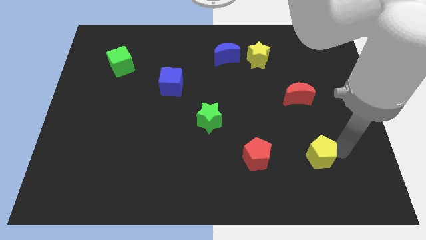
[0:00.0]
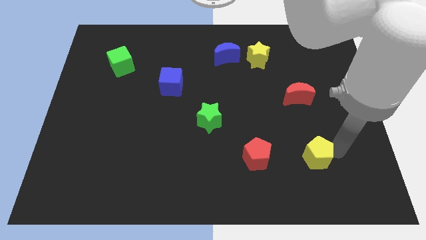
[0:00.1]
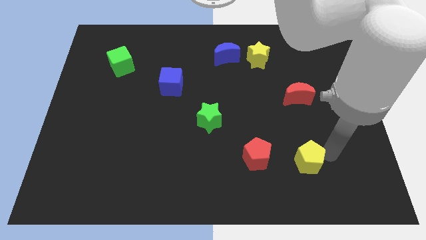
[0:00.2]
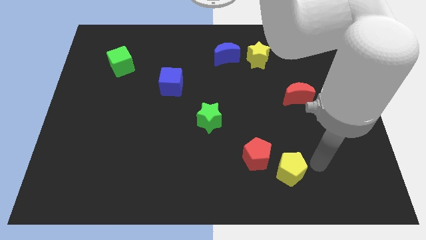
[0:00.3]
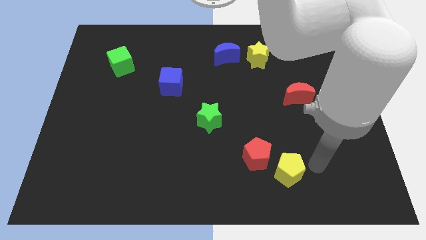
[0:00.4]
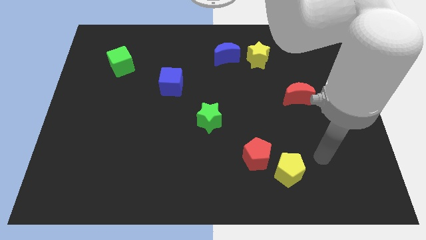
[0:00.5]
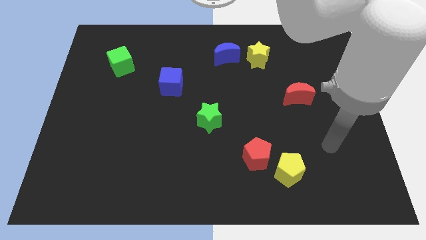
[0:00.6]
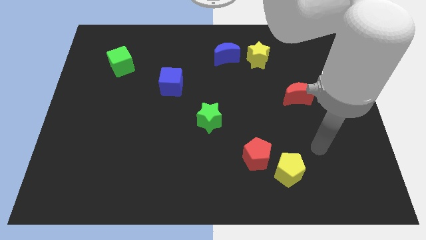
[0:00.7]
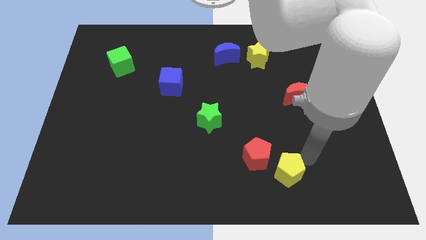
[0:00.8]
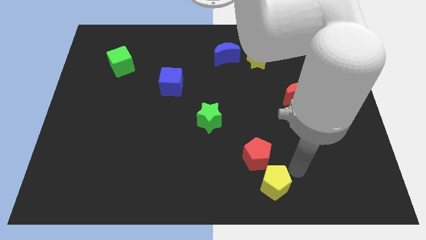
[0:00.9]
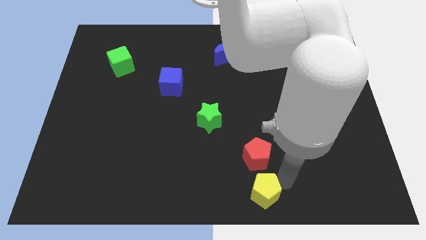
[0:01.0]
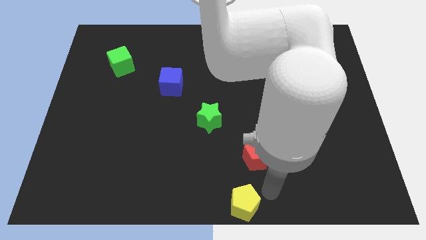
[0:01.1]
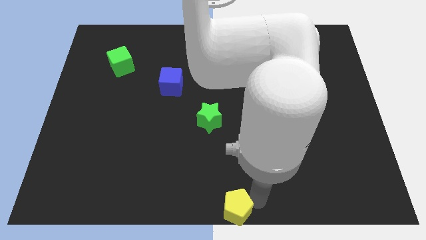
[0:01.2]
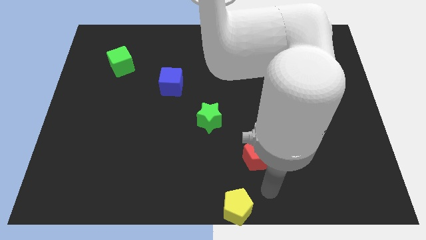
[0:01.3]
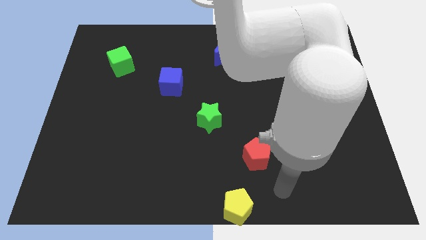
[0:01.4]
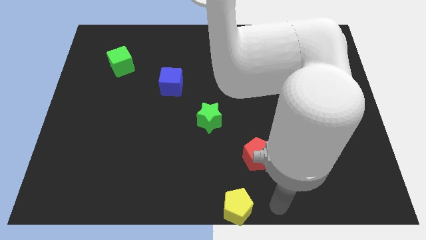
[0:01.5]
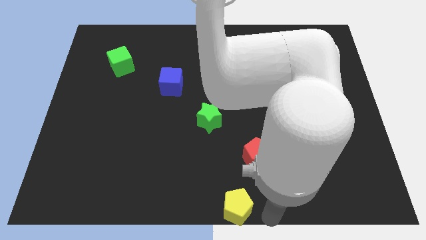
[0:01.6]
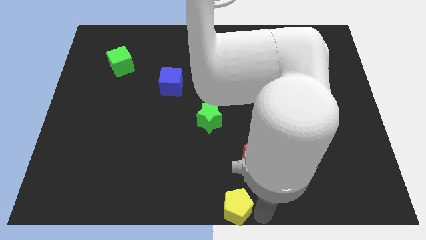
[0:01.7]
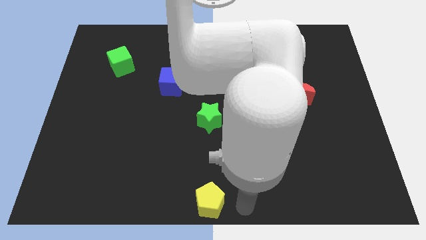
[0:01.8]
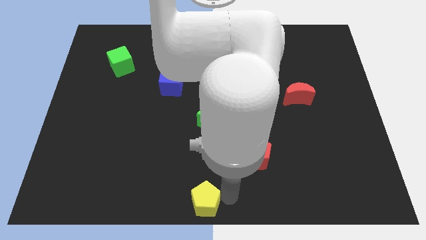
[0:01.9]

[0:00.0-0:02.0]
push the yellow pentagon to the bottom center of the board

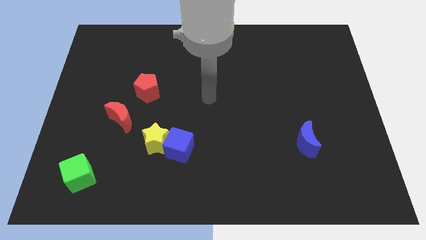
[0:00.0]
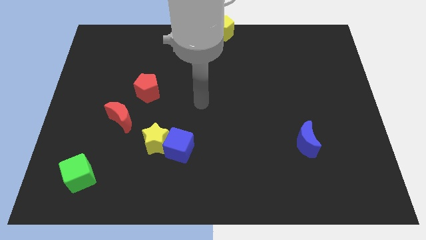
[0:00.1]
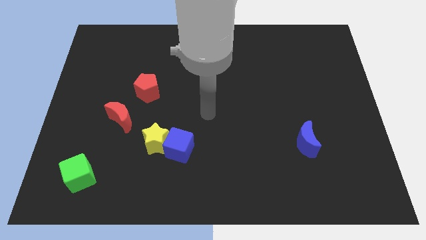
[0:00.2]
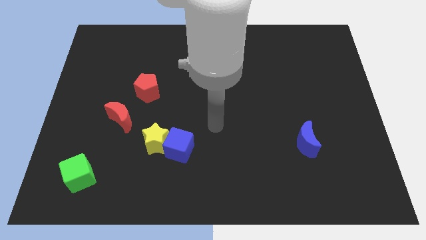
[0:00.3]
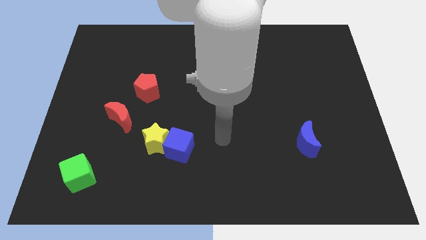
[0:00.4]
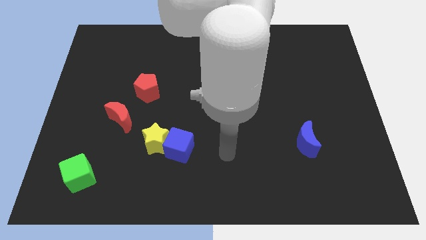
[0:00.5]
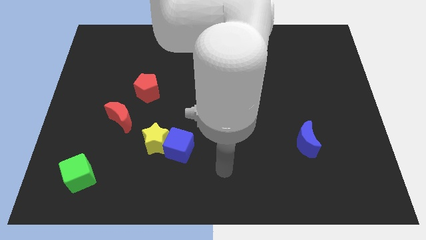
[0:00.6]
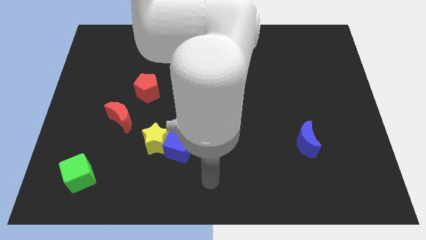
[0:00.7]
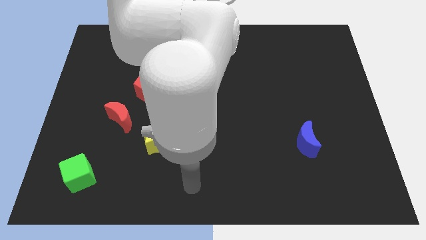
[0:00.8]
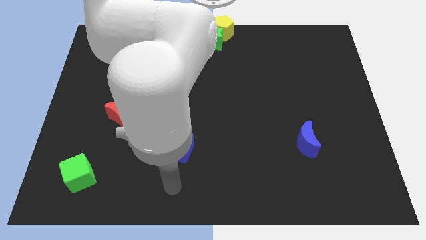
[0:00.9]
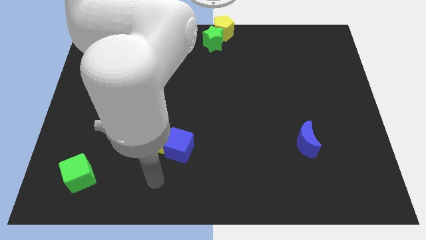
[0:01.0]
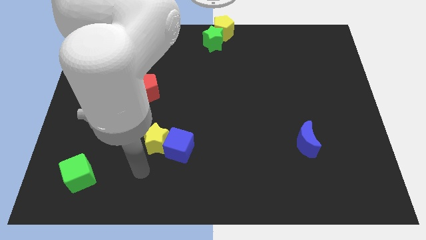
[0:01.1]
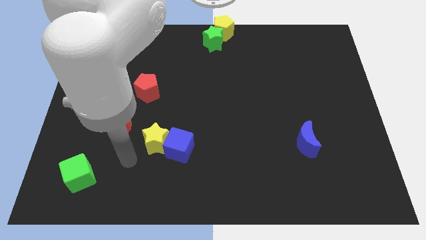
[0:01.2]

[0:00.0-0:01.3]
move the arm towards the yellow star

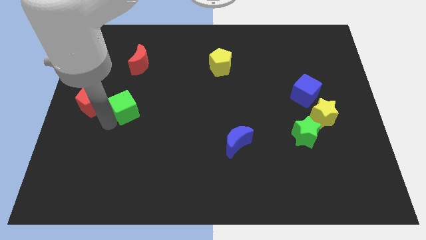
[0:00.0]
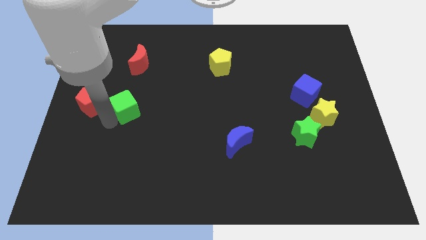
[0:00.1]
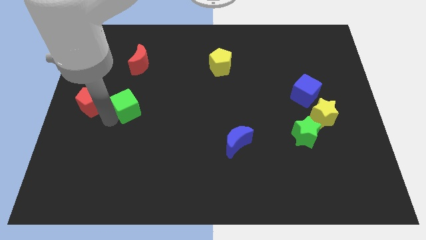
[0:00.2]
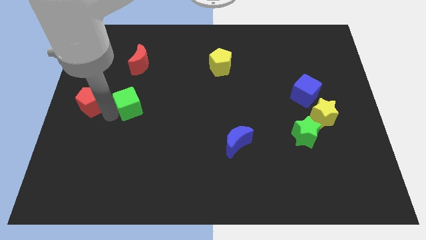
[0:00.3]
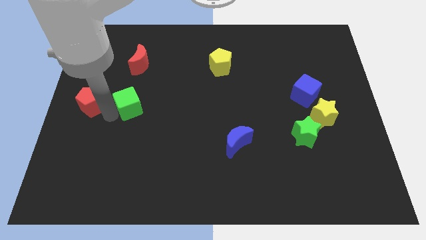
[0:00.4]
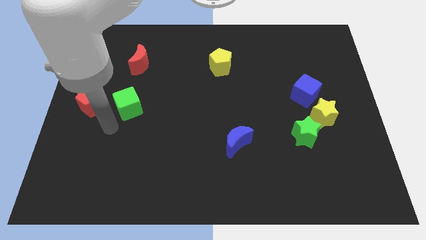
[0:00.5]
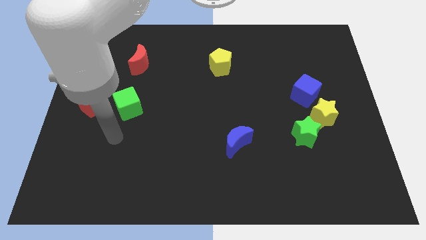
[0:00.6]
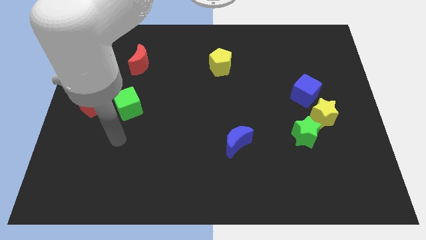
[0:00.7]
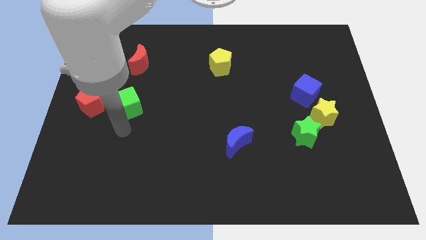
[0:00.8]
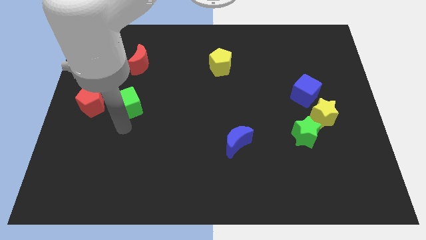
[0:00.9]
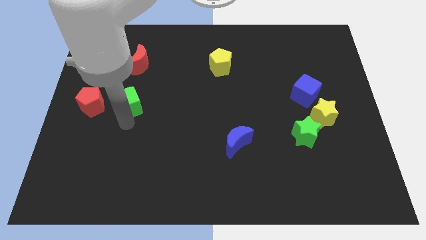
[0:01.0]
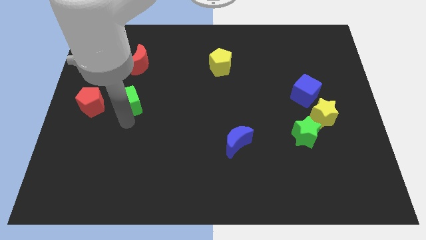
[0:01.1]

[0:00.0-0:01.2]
move the green cube right to the red pentagon

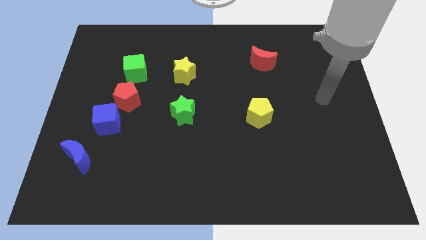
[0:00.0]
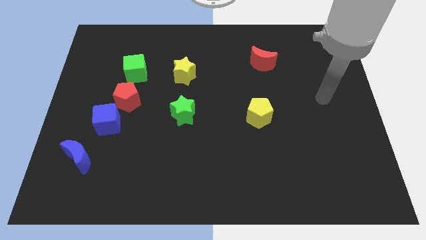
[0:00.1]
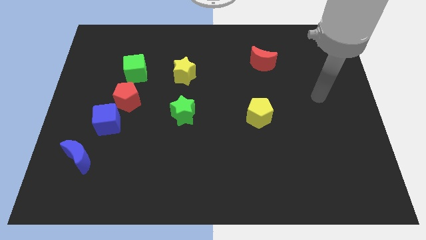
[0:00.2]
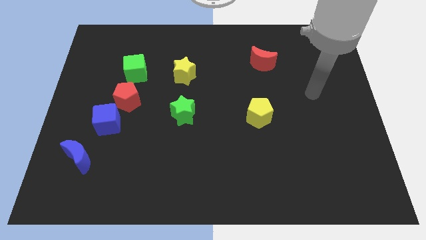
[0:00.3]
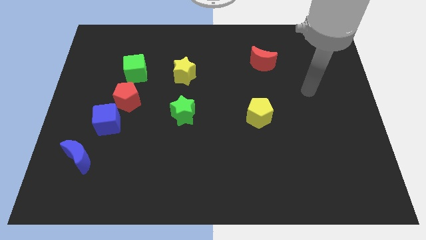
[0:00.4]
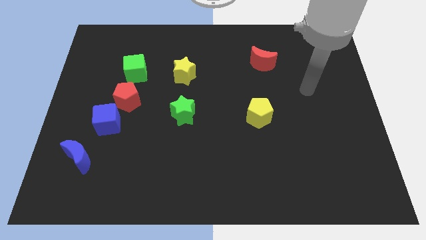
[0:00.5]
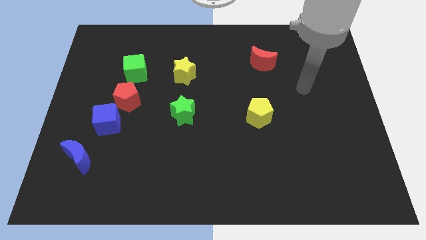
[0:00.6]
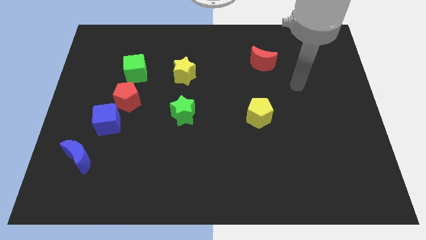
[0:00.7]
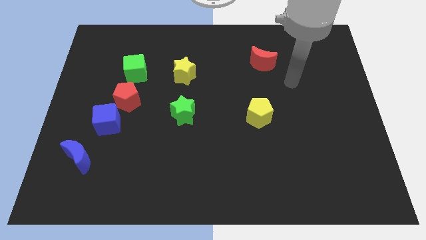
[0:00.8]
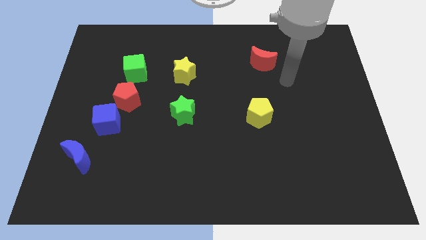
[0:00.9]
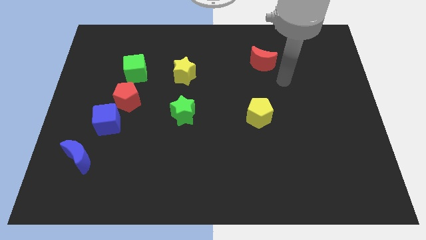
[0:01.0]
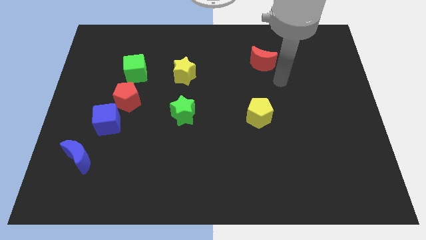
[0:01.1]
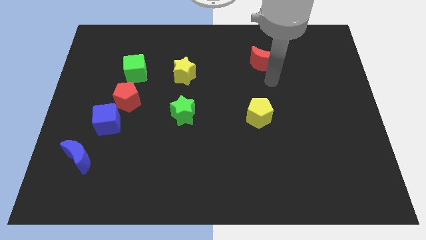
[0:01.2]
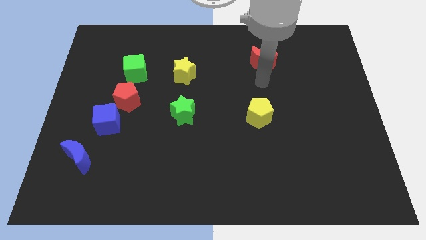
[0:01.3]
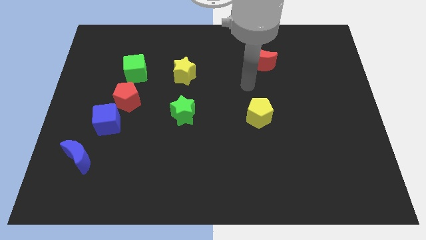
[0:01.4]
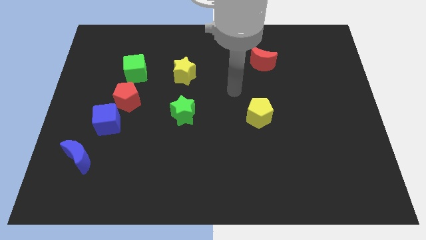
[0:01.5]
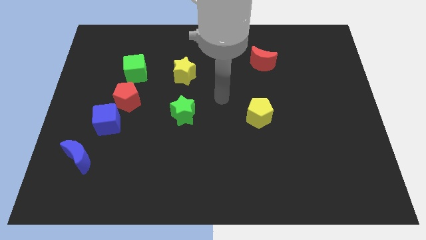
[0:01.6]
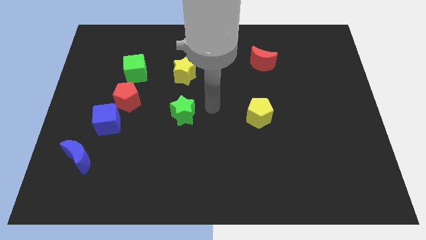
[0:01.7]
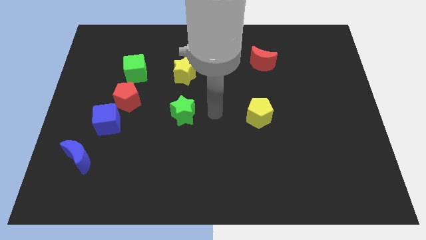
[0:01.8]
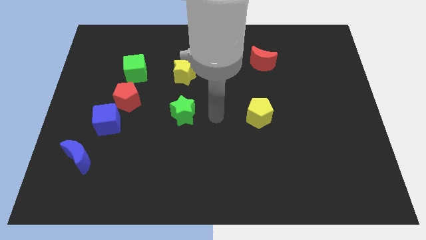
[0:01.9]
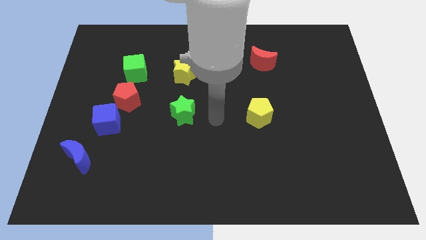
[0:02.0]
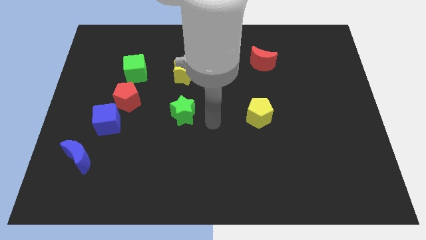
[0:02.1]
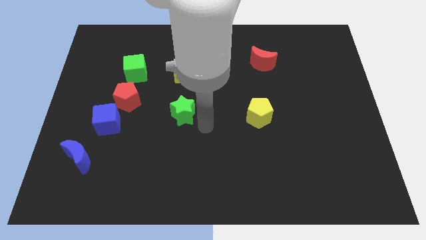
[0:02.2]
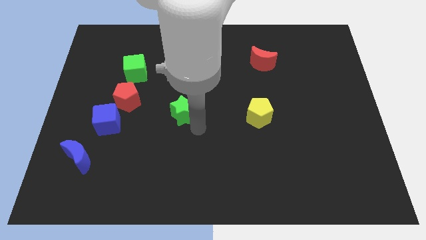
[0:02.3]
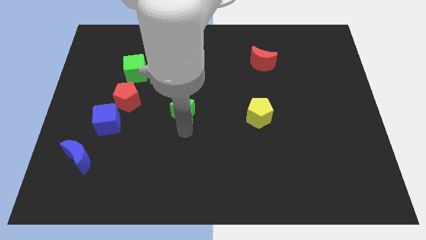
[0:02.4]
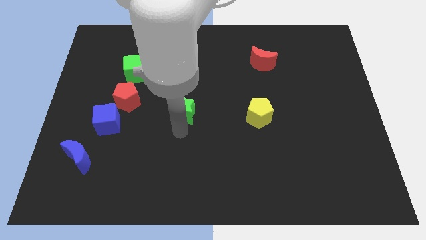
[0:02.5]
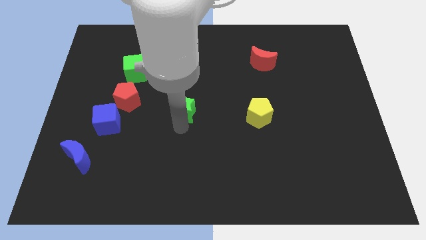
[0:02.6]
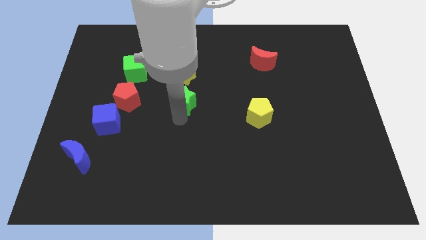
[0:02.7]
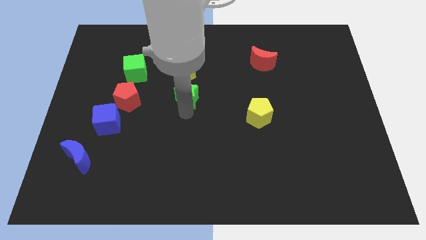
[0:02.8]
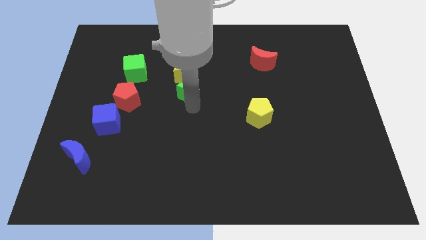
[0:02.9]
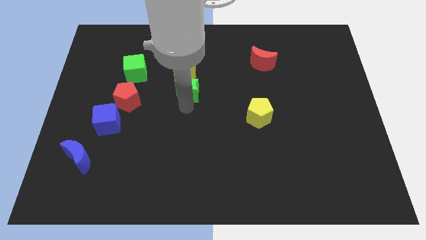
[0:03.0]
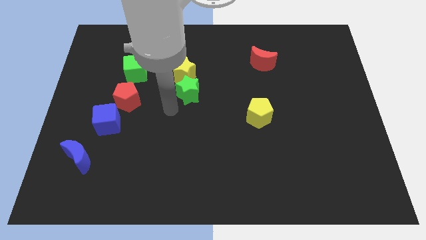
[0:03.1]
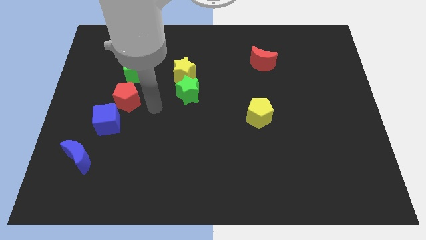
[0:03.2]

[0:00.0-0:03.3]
move green star below to the yellow star

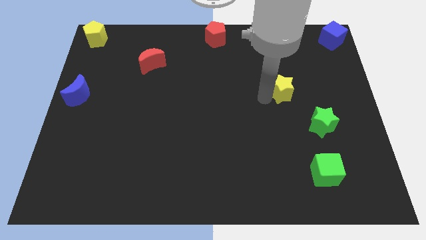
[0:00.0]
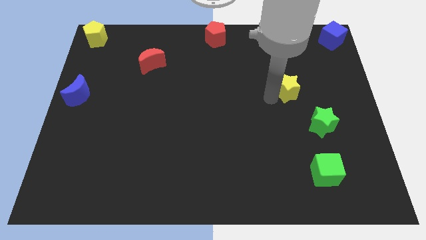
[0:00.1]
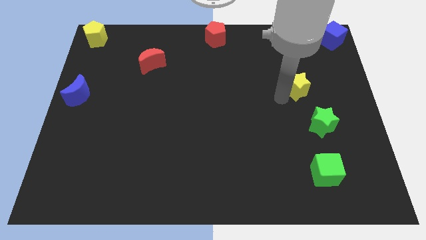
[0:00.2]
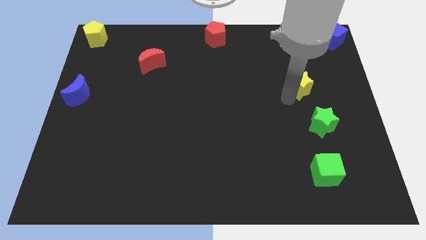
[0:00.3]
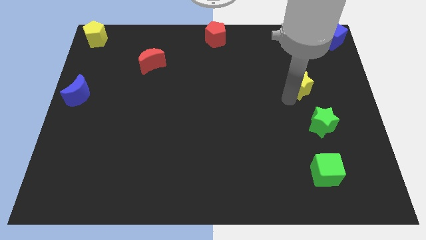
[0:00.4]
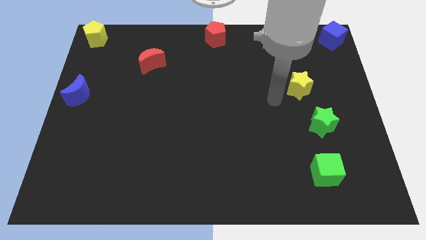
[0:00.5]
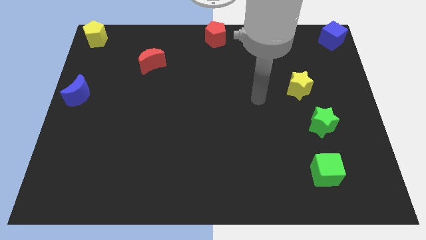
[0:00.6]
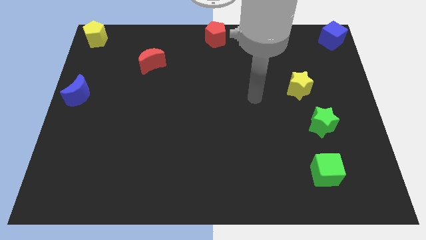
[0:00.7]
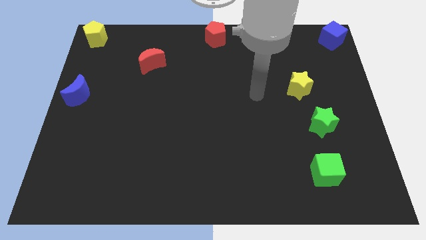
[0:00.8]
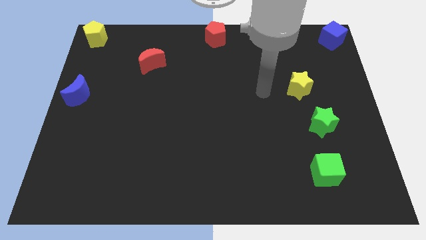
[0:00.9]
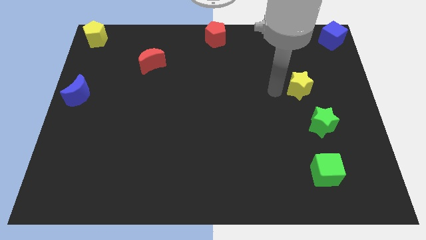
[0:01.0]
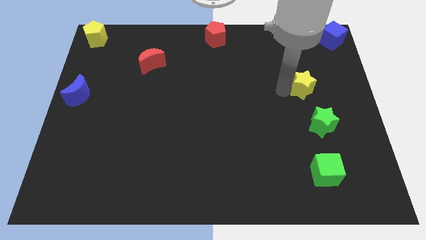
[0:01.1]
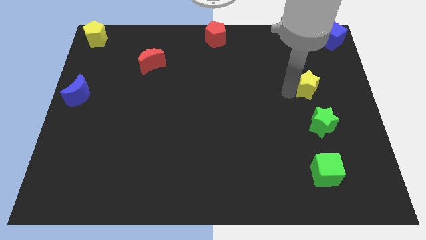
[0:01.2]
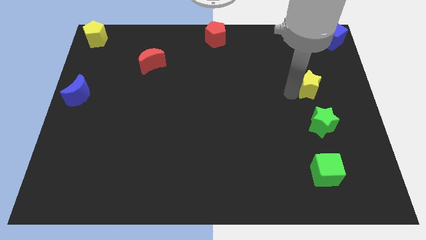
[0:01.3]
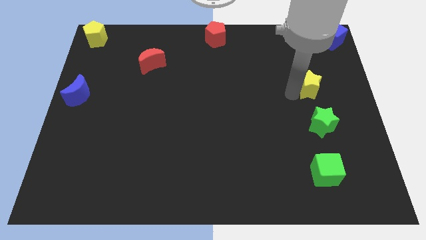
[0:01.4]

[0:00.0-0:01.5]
place the yellow star above the green star
